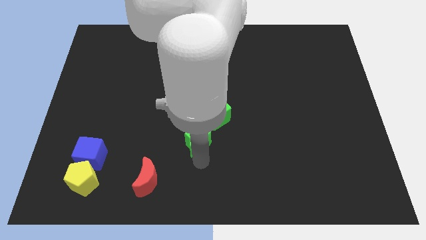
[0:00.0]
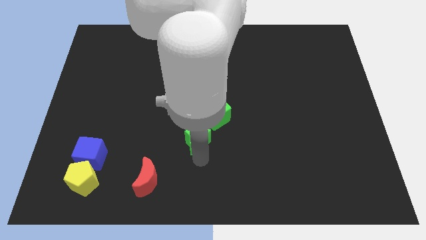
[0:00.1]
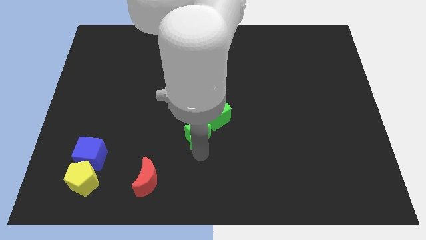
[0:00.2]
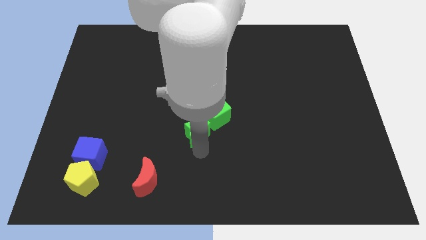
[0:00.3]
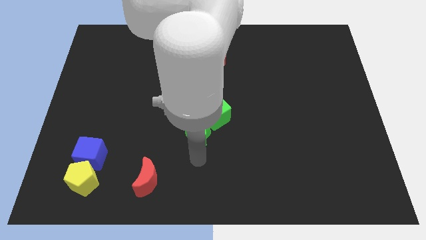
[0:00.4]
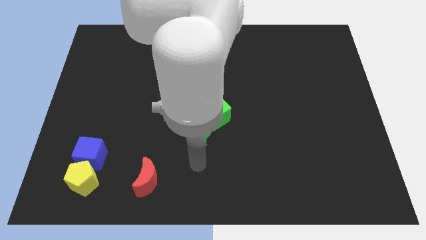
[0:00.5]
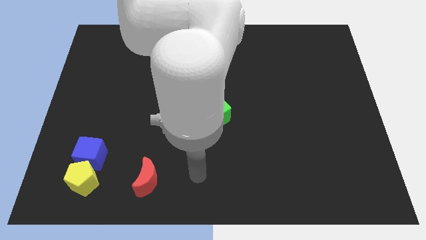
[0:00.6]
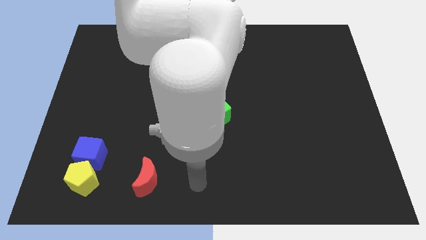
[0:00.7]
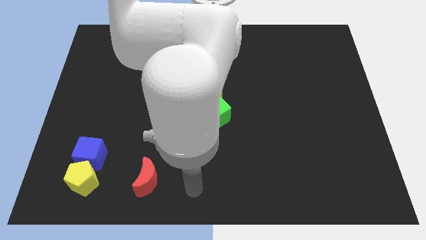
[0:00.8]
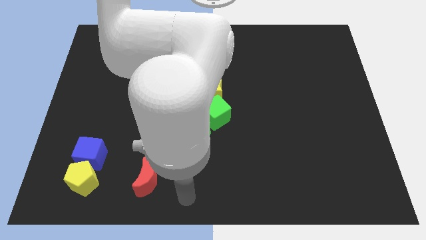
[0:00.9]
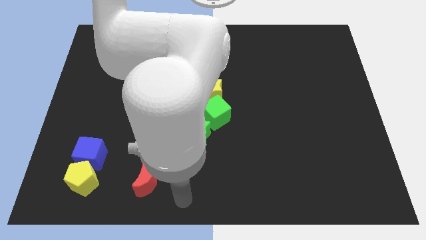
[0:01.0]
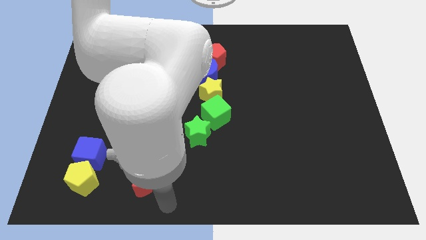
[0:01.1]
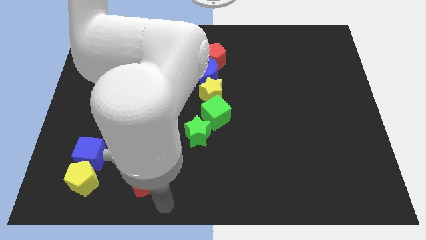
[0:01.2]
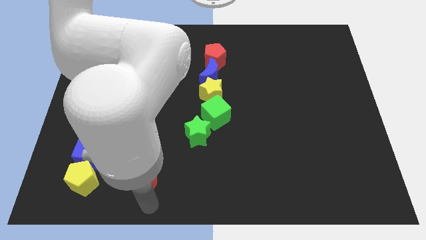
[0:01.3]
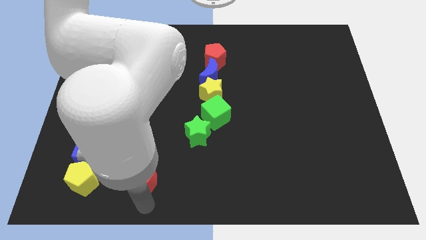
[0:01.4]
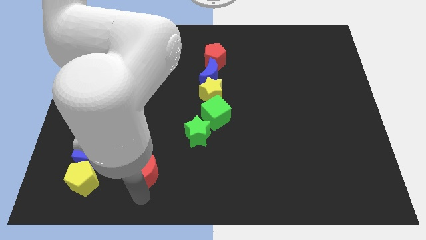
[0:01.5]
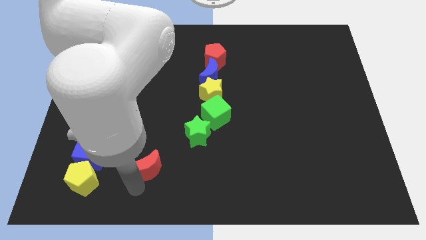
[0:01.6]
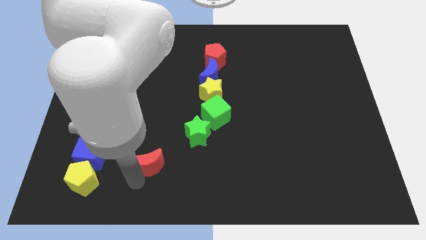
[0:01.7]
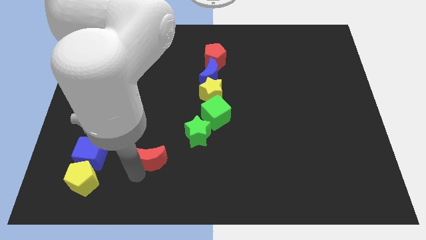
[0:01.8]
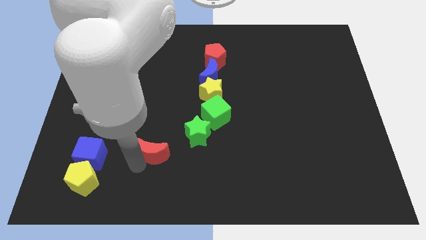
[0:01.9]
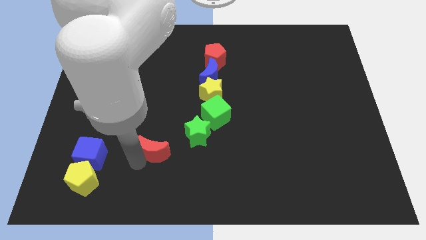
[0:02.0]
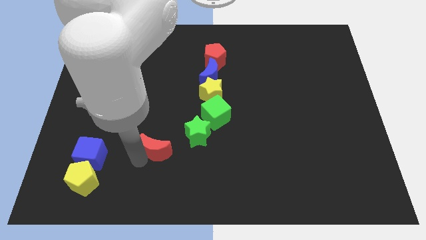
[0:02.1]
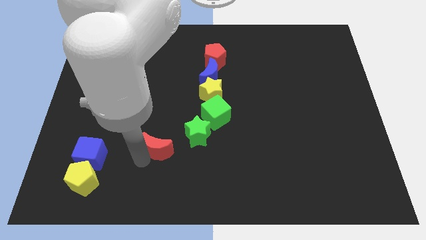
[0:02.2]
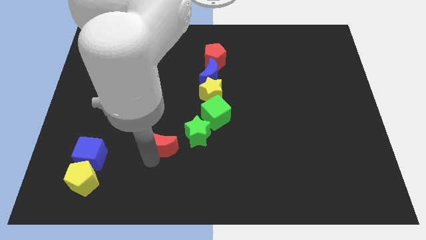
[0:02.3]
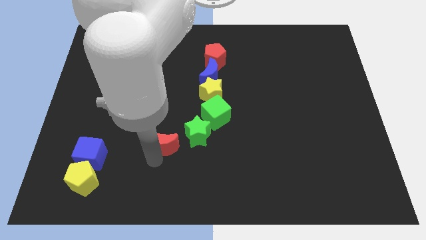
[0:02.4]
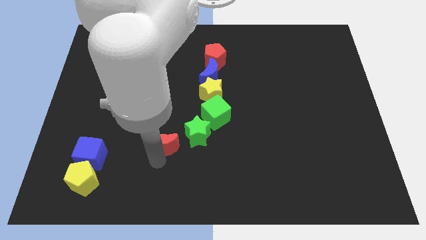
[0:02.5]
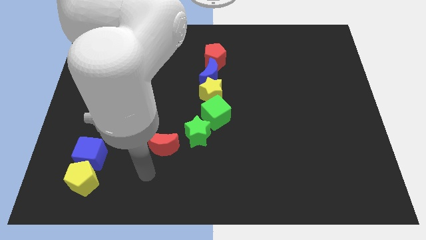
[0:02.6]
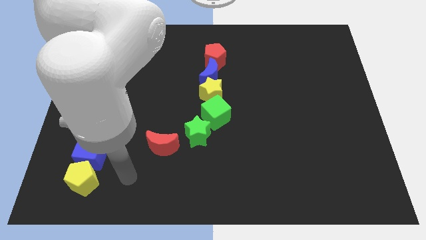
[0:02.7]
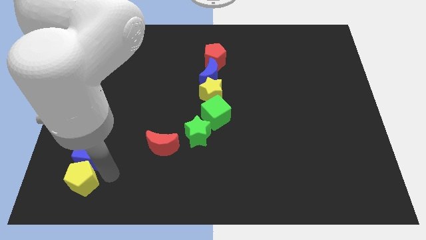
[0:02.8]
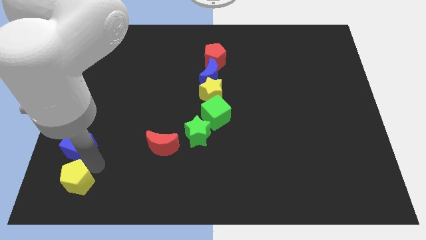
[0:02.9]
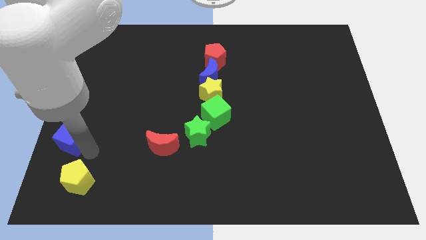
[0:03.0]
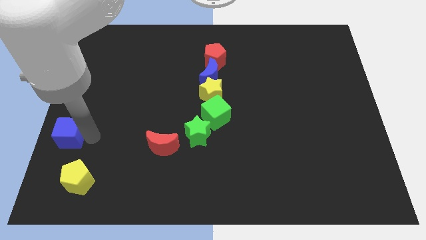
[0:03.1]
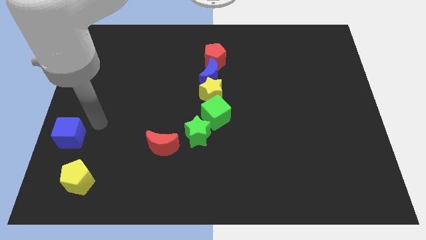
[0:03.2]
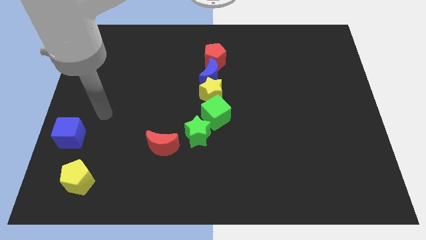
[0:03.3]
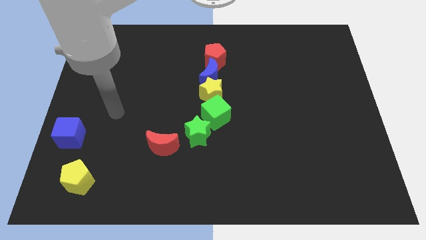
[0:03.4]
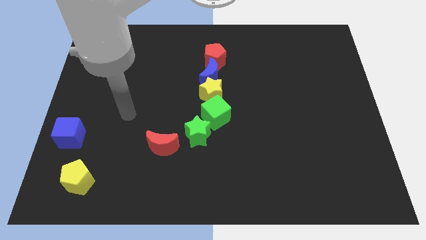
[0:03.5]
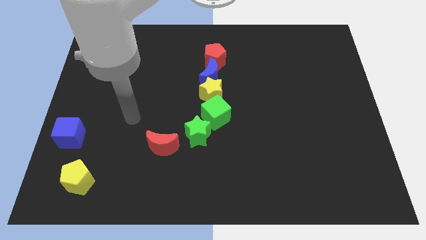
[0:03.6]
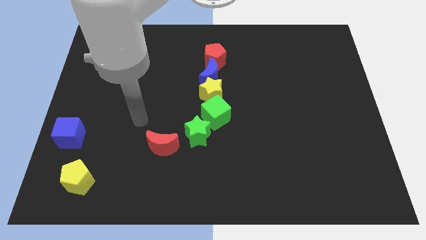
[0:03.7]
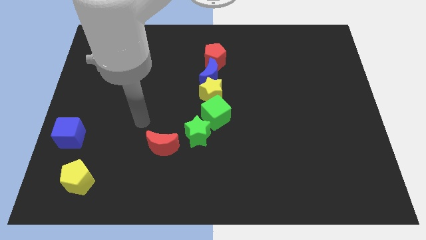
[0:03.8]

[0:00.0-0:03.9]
push red moon to the left of green star

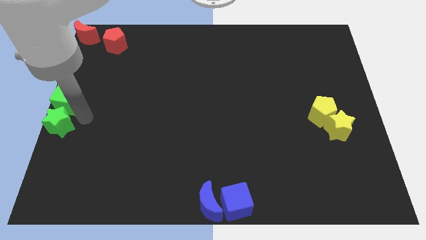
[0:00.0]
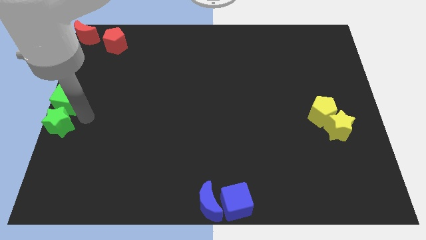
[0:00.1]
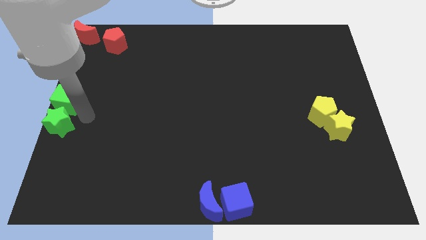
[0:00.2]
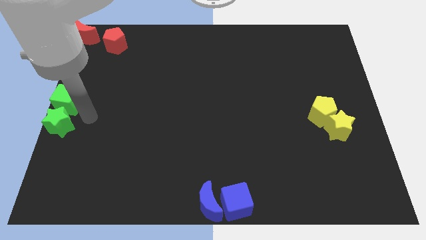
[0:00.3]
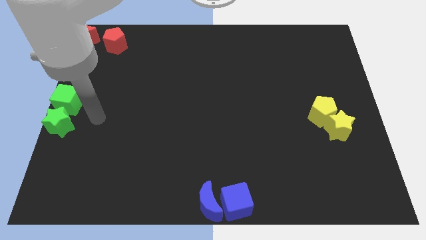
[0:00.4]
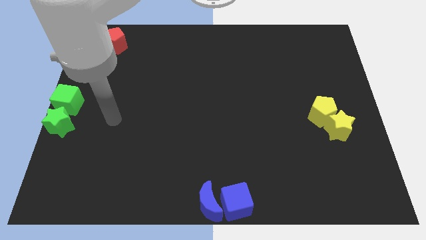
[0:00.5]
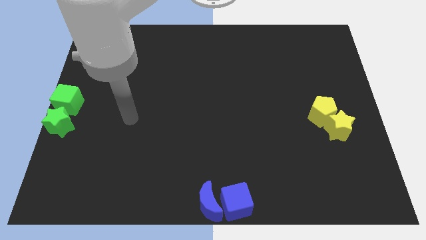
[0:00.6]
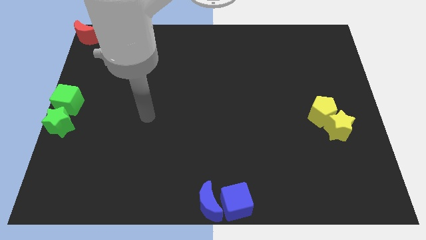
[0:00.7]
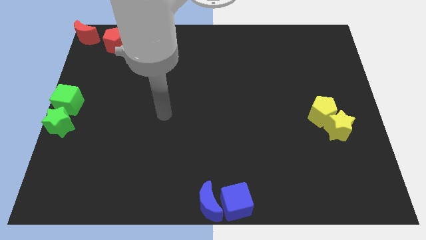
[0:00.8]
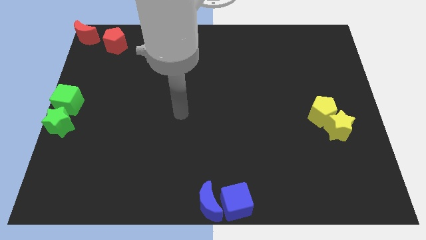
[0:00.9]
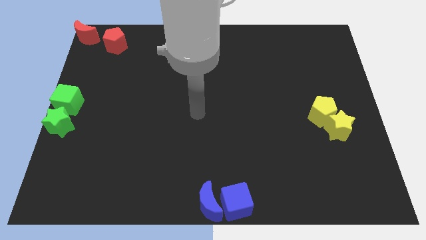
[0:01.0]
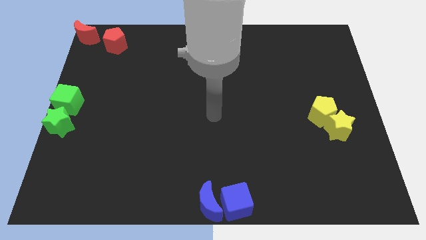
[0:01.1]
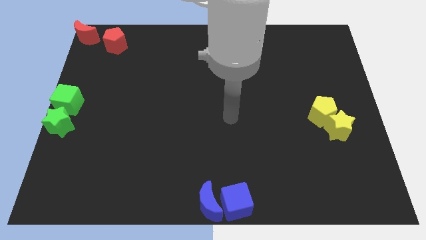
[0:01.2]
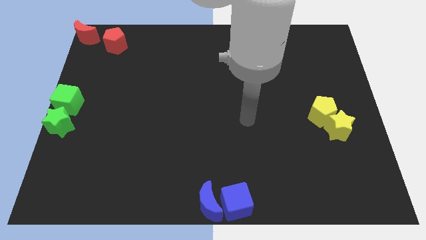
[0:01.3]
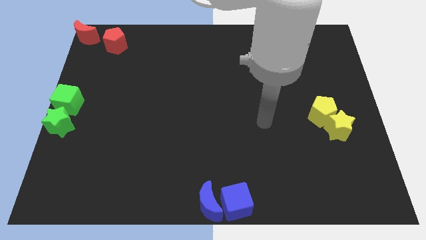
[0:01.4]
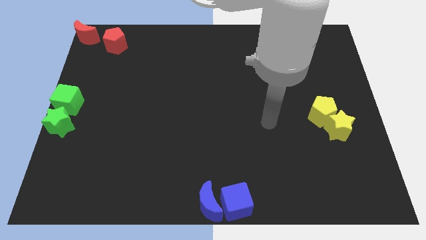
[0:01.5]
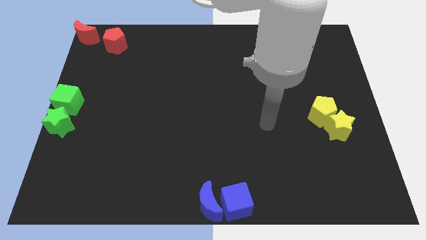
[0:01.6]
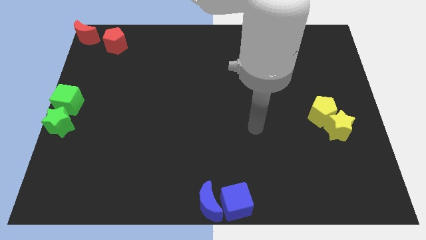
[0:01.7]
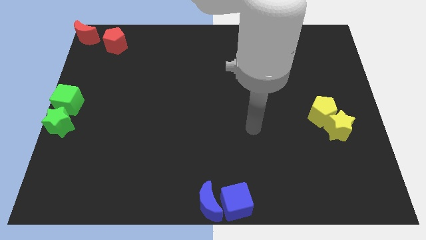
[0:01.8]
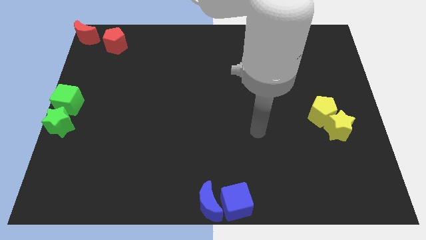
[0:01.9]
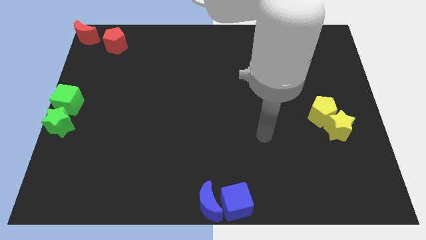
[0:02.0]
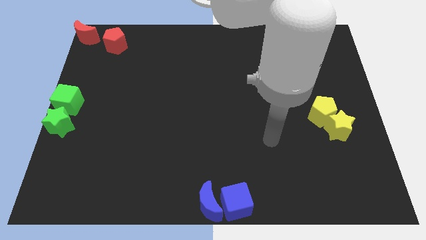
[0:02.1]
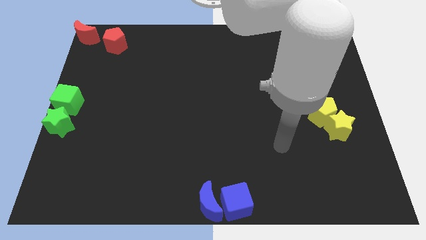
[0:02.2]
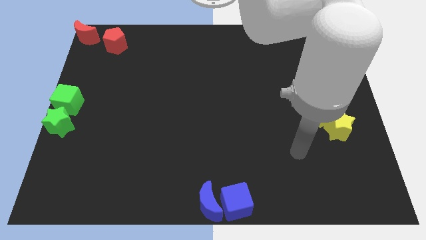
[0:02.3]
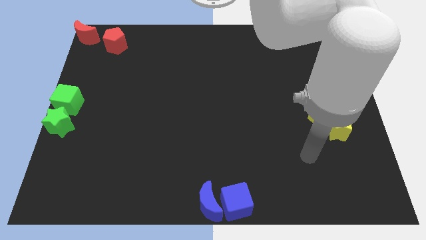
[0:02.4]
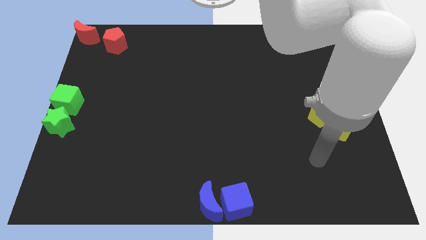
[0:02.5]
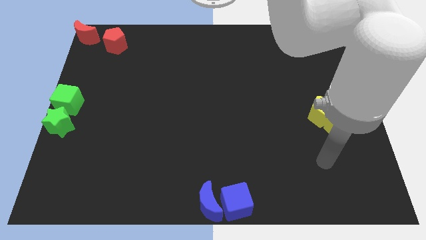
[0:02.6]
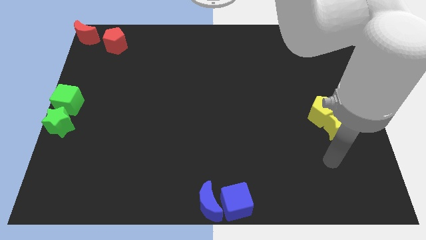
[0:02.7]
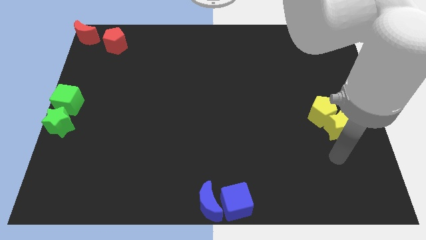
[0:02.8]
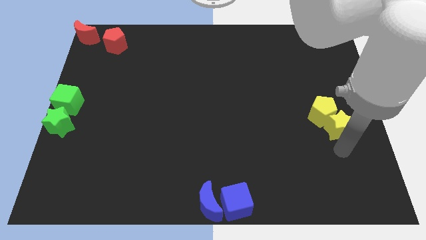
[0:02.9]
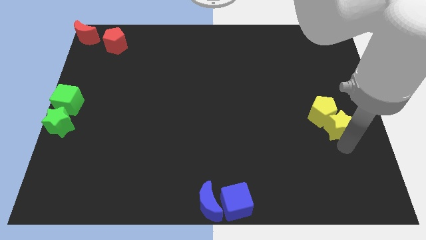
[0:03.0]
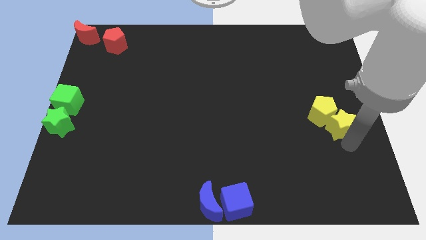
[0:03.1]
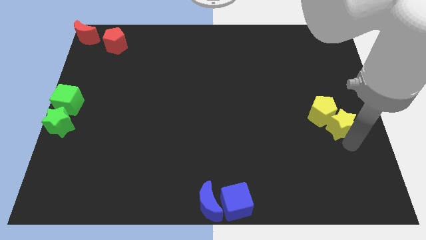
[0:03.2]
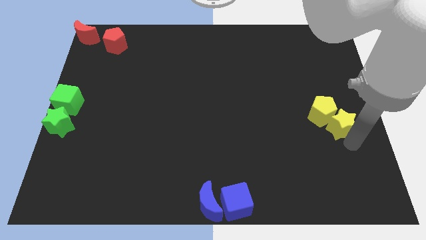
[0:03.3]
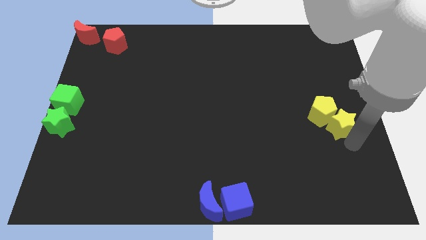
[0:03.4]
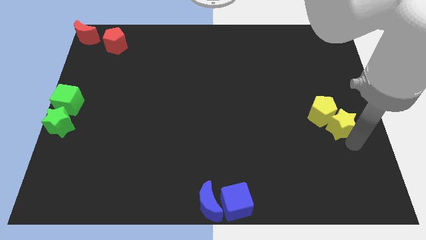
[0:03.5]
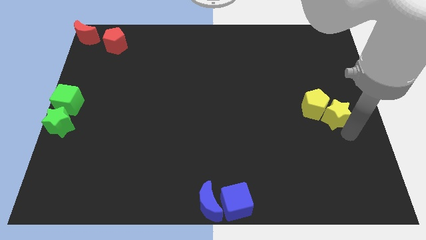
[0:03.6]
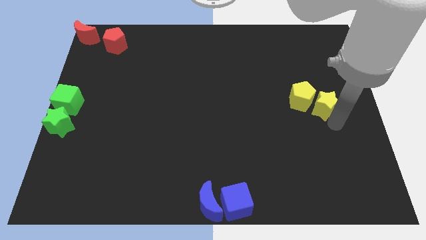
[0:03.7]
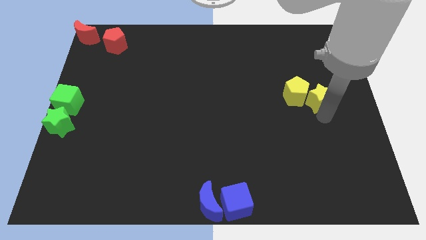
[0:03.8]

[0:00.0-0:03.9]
move the yellow blocks towards the top of the board

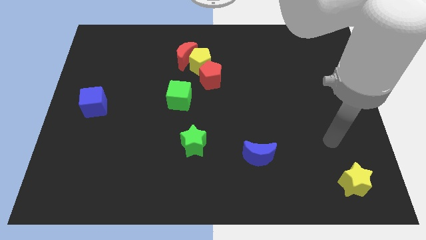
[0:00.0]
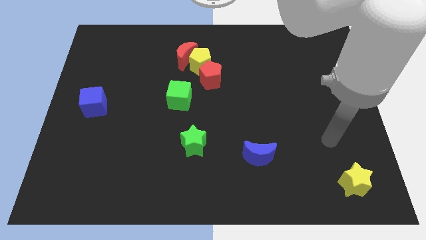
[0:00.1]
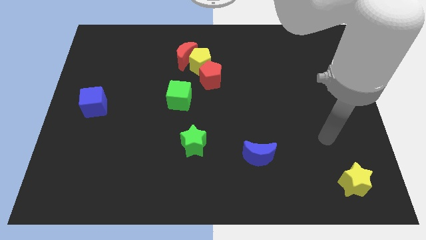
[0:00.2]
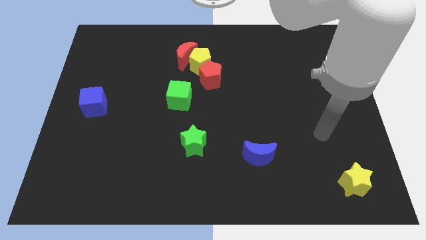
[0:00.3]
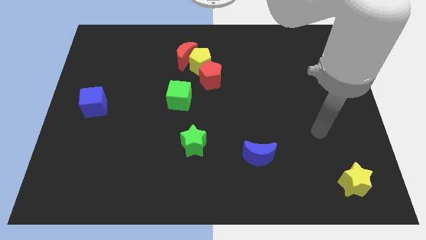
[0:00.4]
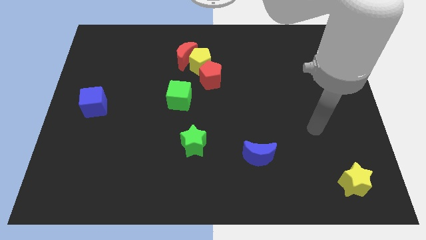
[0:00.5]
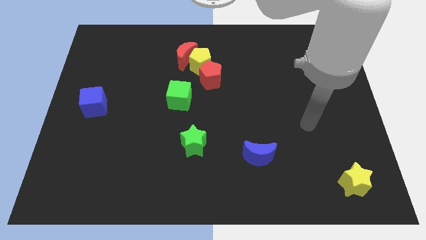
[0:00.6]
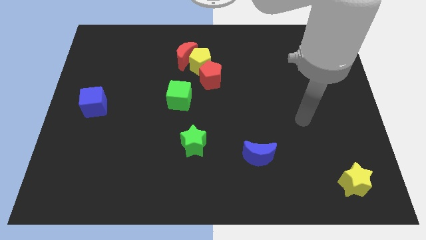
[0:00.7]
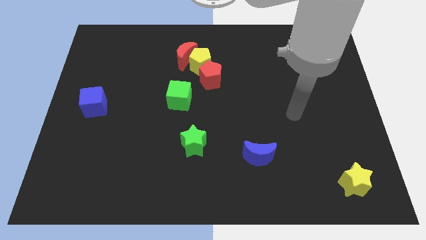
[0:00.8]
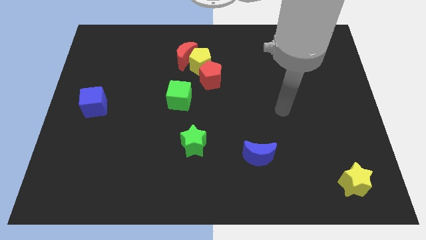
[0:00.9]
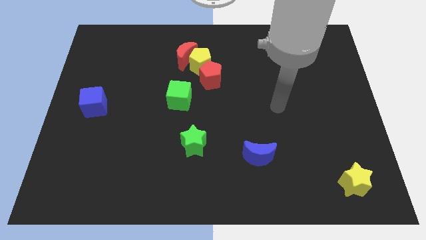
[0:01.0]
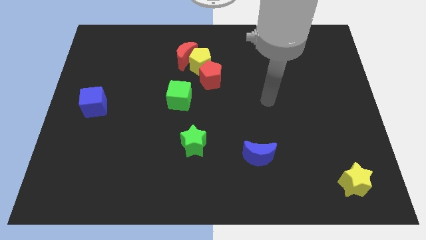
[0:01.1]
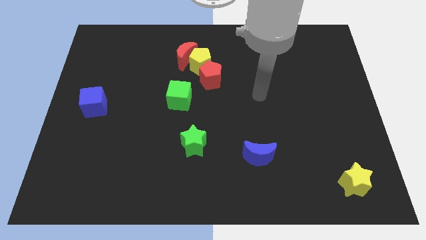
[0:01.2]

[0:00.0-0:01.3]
move robot arm towards red pentagon

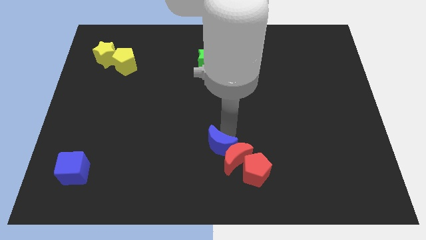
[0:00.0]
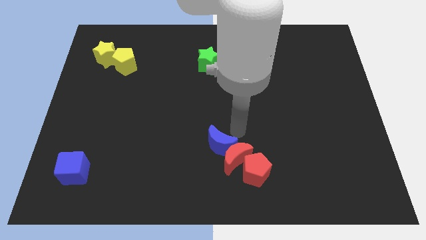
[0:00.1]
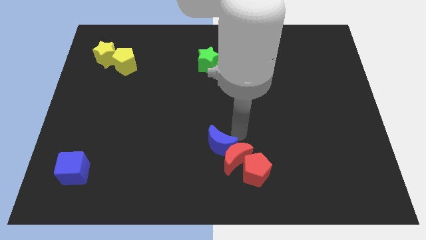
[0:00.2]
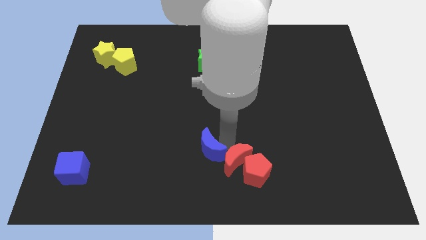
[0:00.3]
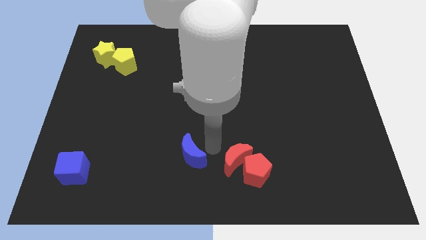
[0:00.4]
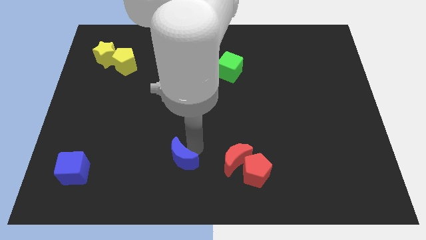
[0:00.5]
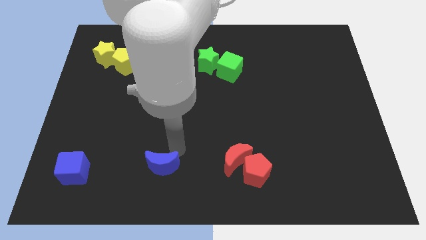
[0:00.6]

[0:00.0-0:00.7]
place the blue moon left to the red moon
